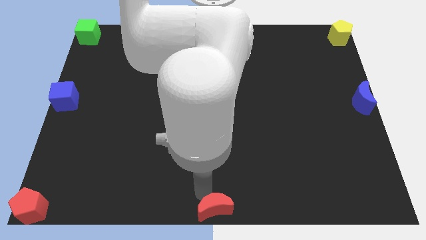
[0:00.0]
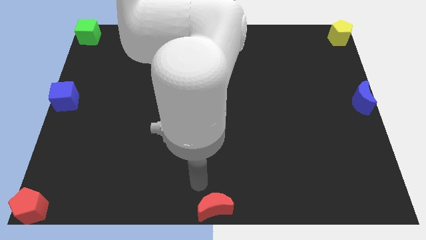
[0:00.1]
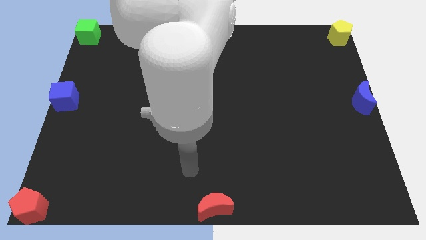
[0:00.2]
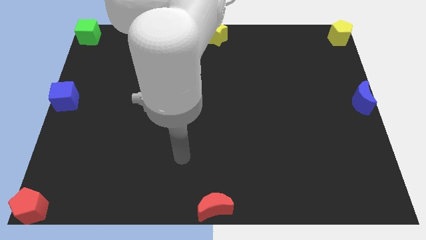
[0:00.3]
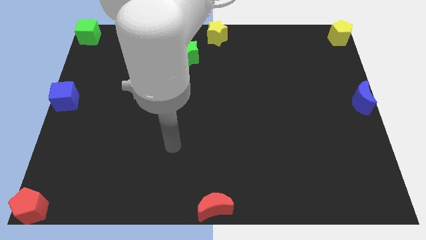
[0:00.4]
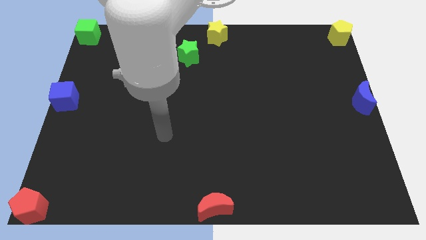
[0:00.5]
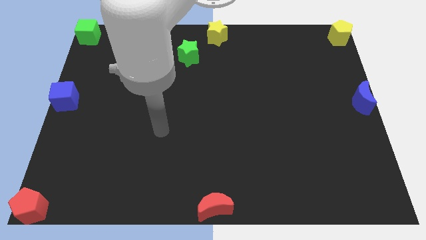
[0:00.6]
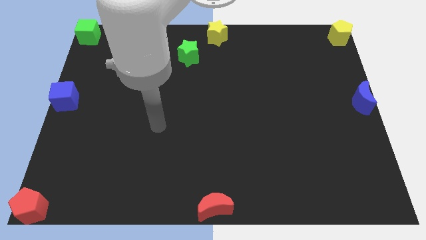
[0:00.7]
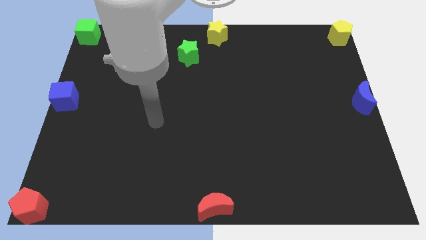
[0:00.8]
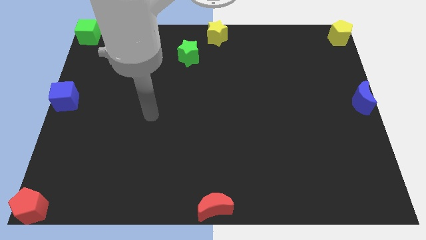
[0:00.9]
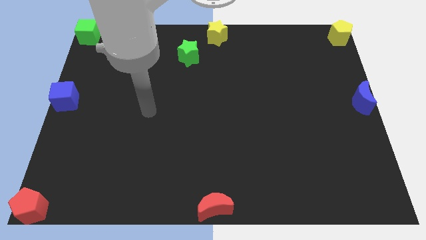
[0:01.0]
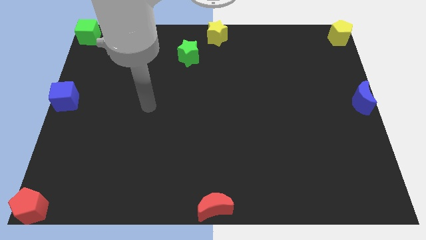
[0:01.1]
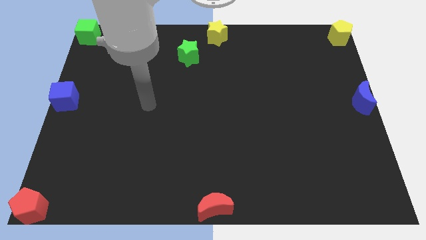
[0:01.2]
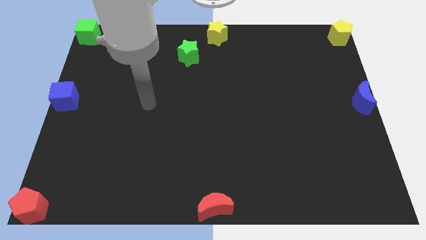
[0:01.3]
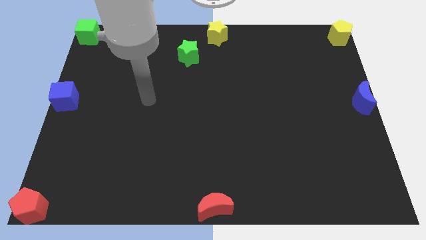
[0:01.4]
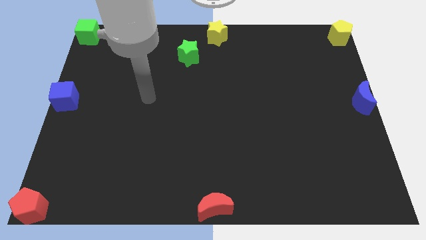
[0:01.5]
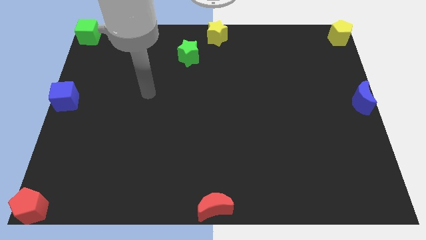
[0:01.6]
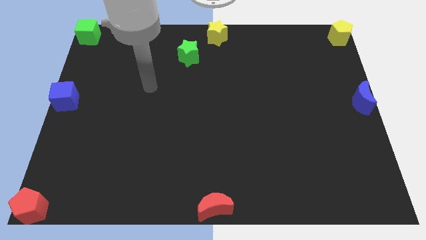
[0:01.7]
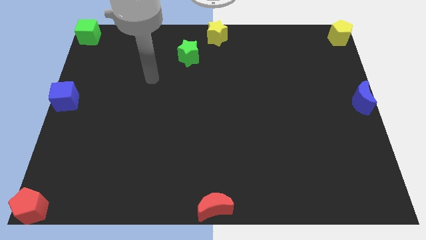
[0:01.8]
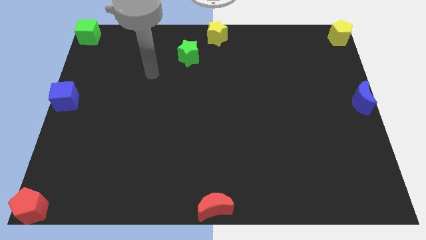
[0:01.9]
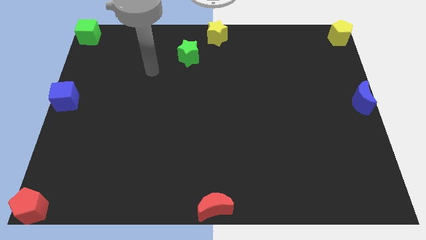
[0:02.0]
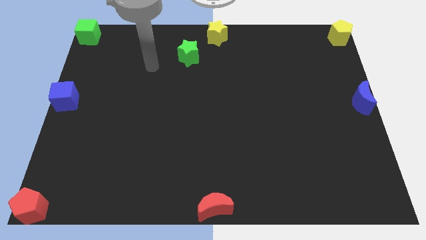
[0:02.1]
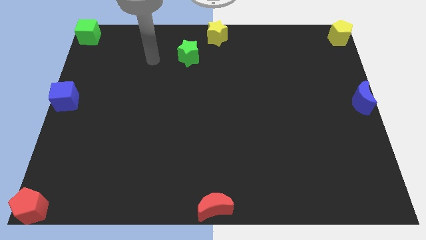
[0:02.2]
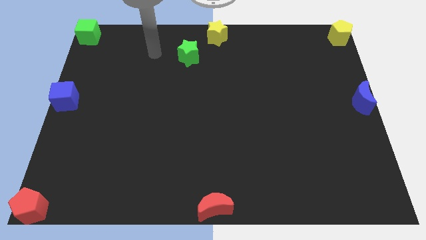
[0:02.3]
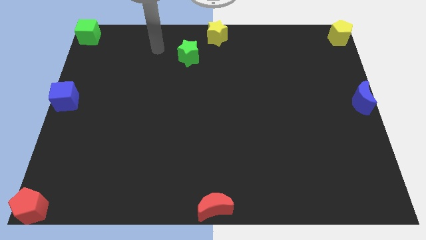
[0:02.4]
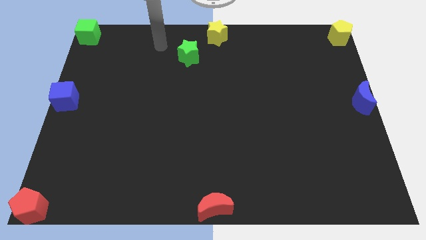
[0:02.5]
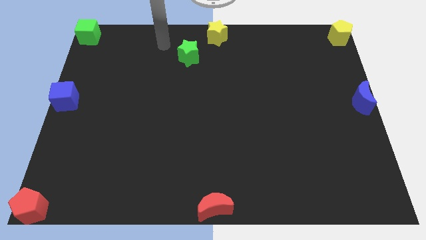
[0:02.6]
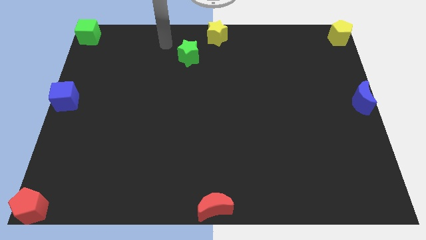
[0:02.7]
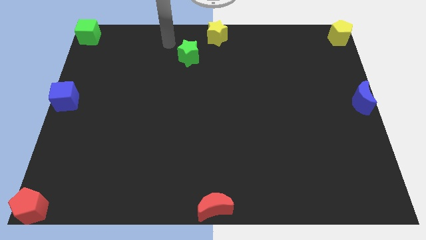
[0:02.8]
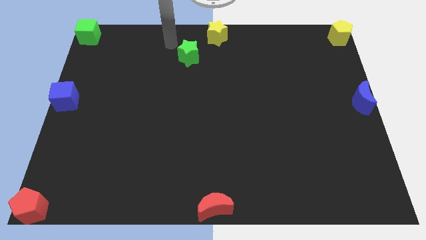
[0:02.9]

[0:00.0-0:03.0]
move the arm near the green star

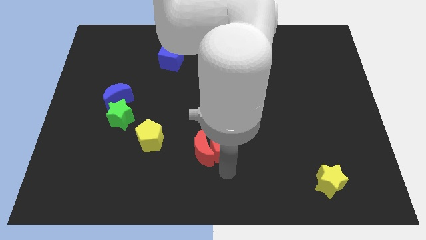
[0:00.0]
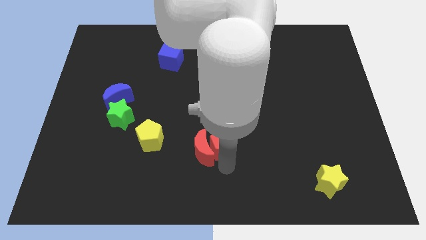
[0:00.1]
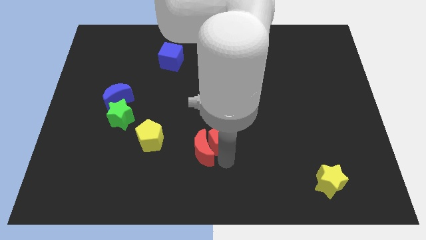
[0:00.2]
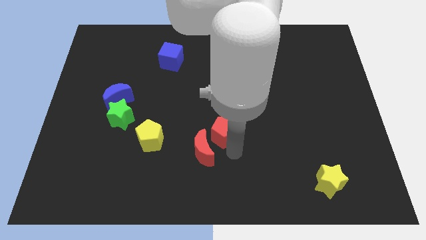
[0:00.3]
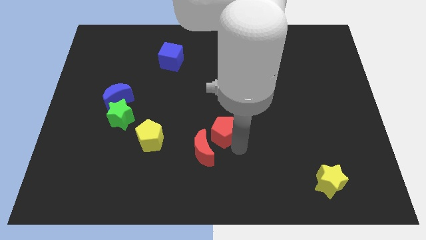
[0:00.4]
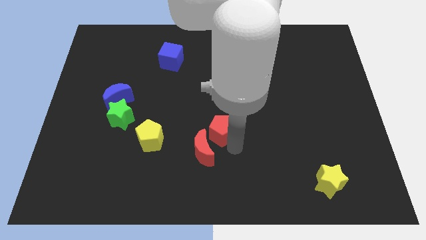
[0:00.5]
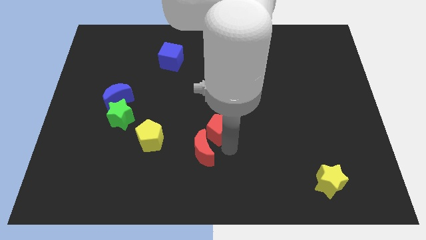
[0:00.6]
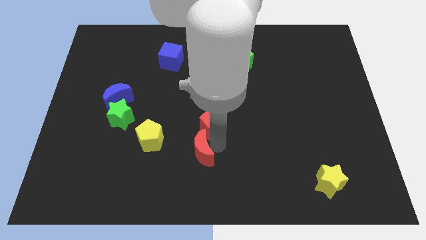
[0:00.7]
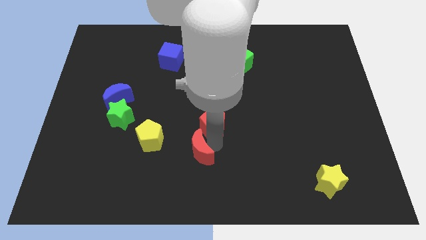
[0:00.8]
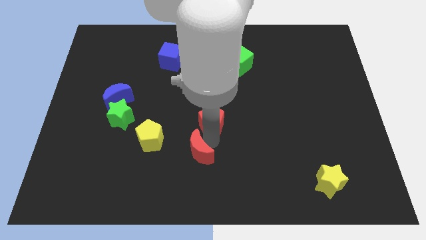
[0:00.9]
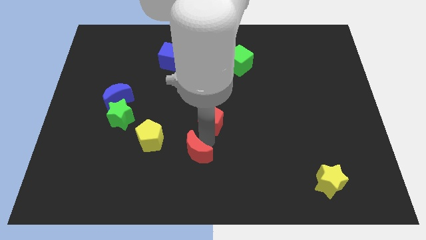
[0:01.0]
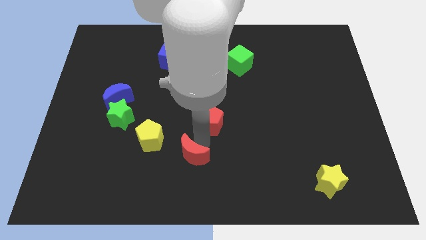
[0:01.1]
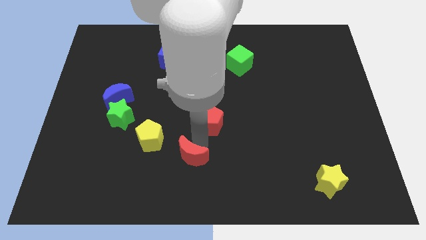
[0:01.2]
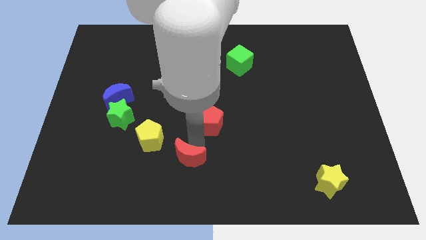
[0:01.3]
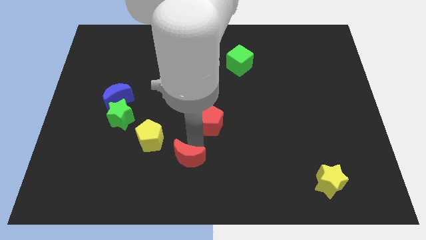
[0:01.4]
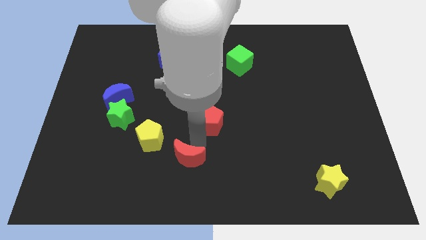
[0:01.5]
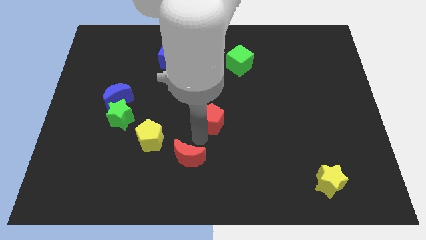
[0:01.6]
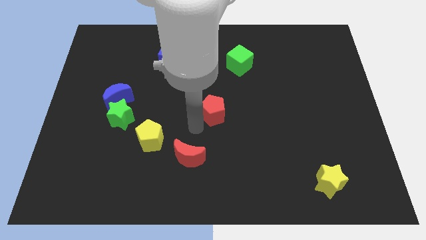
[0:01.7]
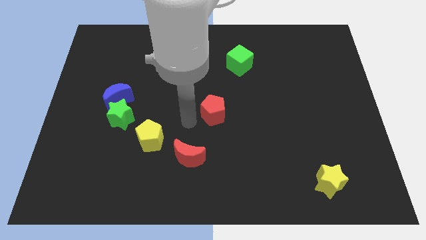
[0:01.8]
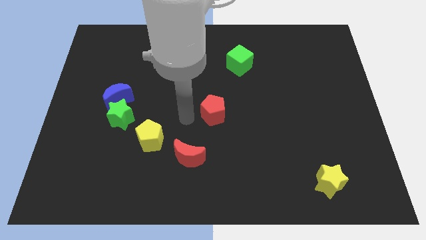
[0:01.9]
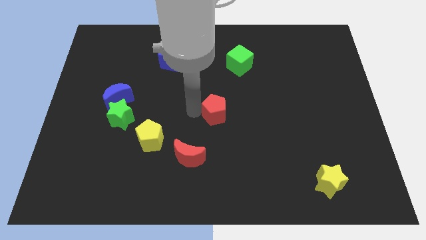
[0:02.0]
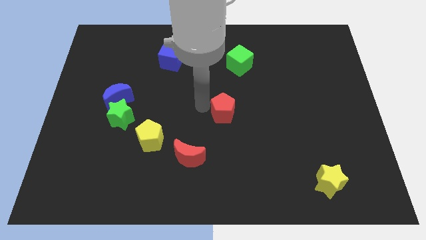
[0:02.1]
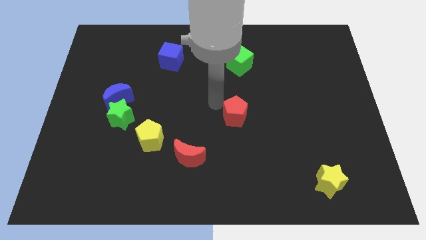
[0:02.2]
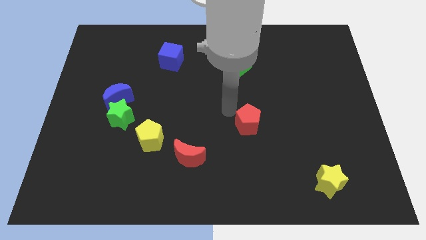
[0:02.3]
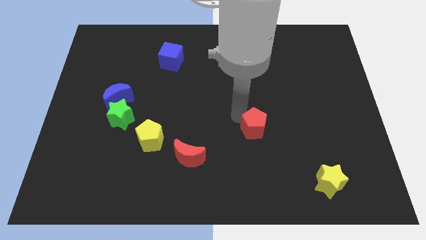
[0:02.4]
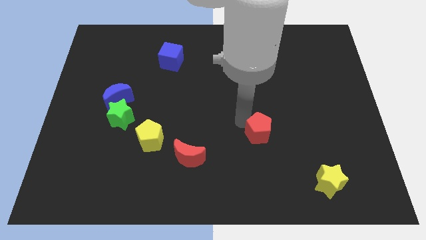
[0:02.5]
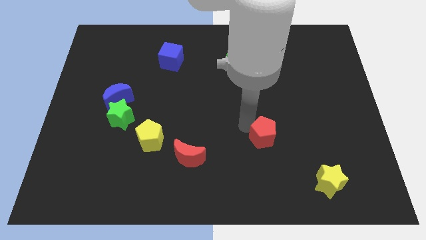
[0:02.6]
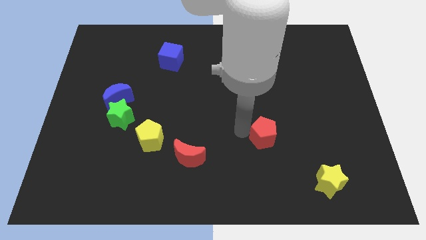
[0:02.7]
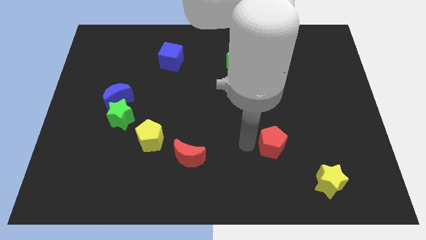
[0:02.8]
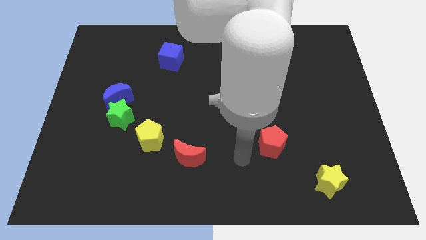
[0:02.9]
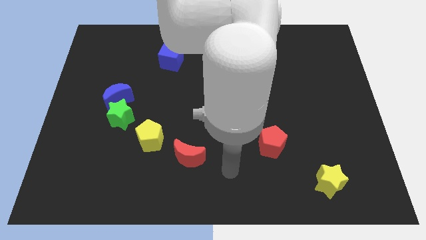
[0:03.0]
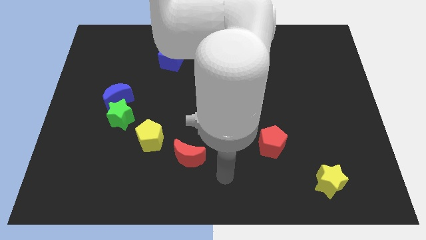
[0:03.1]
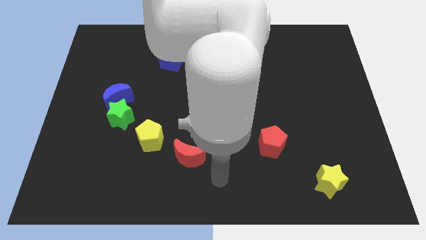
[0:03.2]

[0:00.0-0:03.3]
move red pentagon diagonally on the top left to yellow star

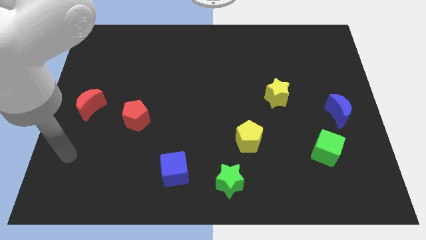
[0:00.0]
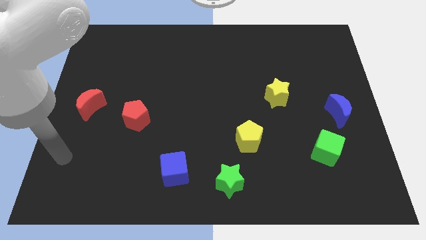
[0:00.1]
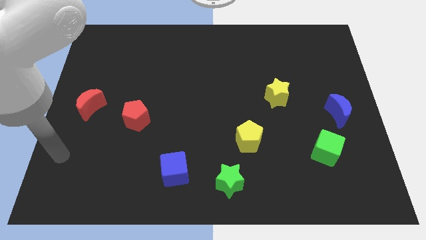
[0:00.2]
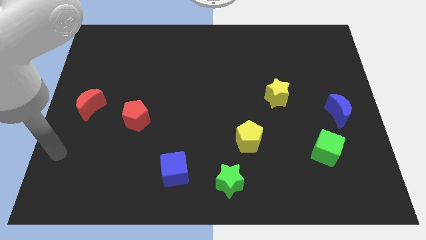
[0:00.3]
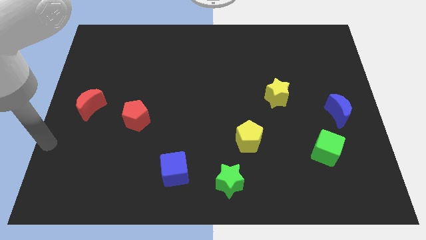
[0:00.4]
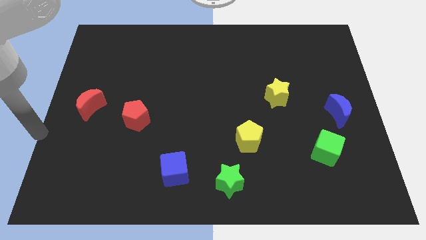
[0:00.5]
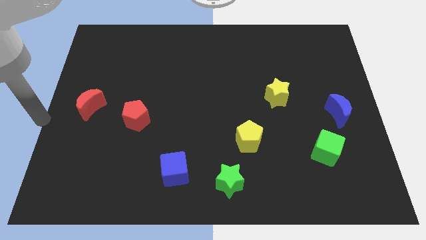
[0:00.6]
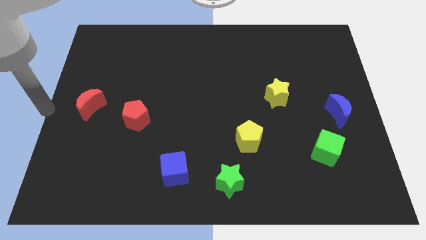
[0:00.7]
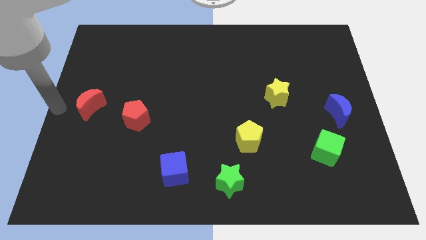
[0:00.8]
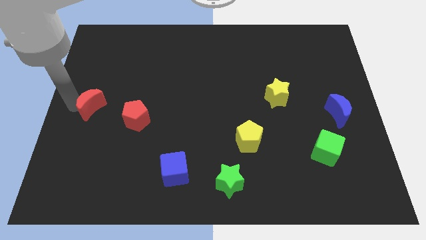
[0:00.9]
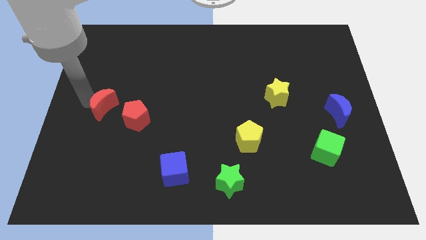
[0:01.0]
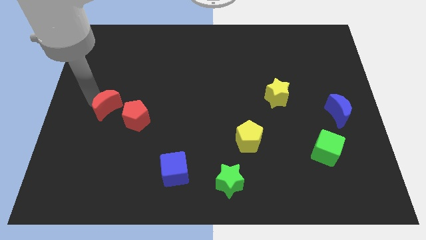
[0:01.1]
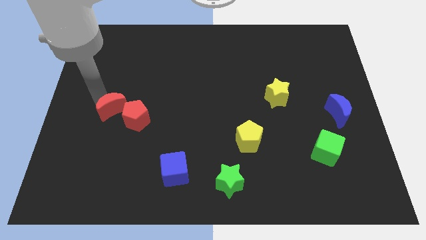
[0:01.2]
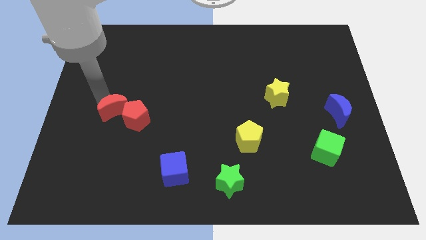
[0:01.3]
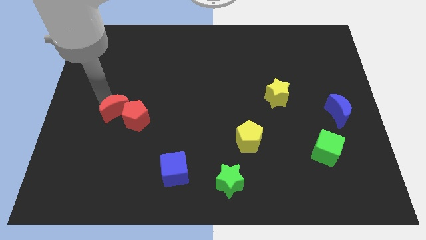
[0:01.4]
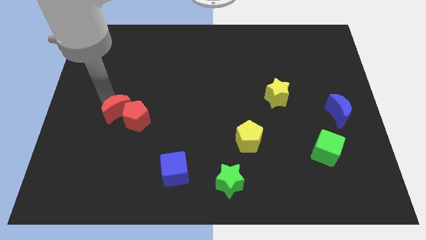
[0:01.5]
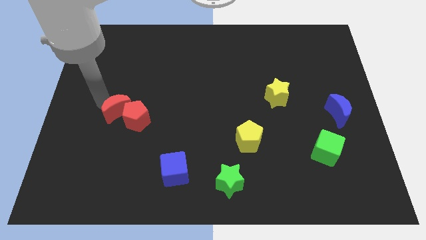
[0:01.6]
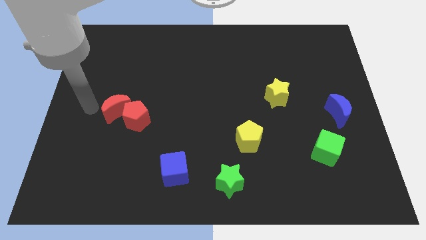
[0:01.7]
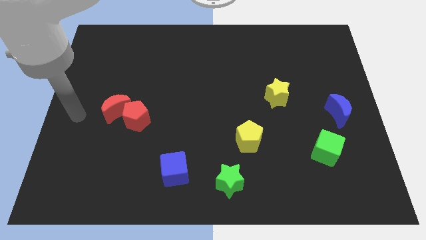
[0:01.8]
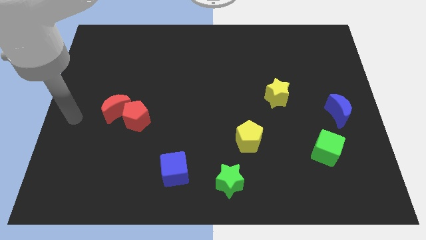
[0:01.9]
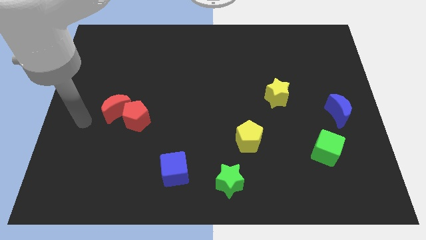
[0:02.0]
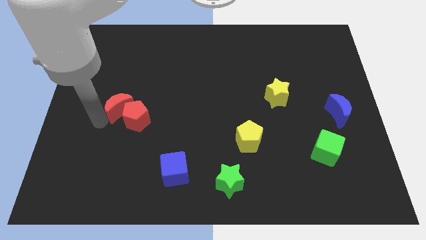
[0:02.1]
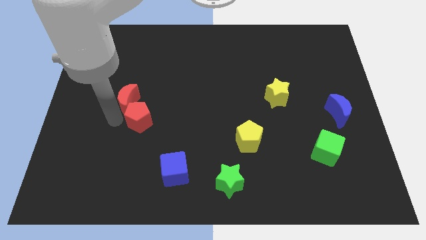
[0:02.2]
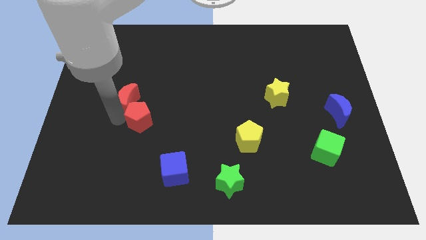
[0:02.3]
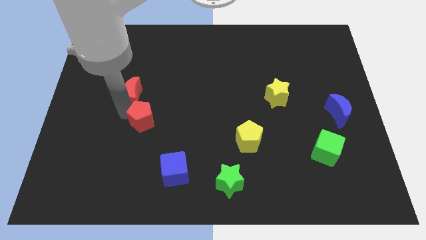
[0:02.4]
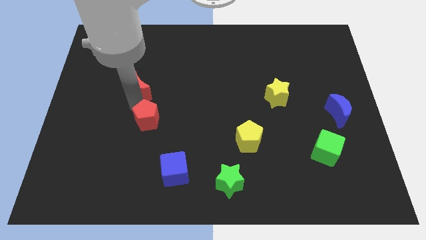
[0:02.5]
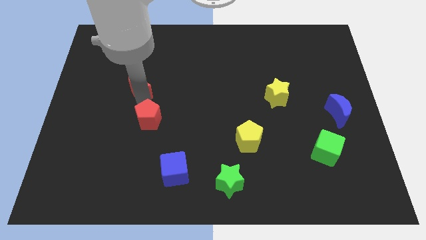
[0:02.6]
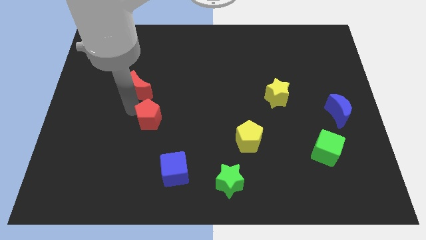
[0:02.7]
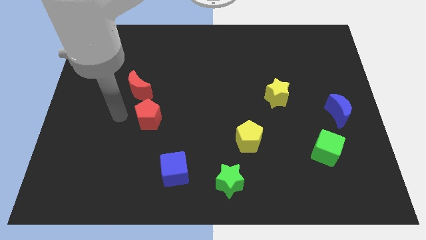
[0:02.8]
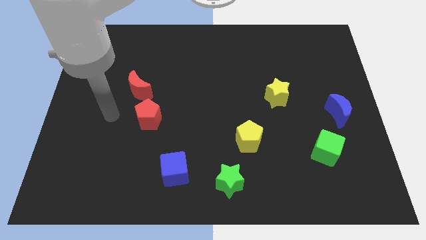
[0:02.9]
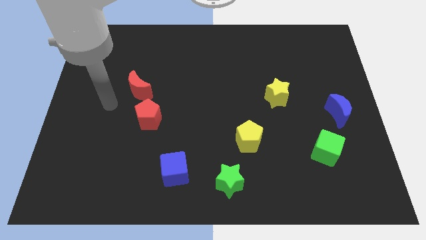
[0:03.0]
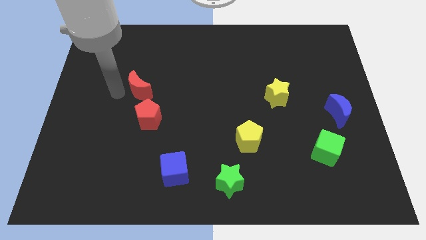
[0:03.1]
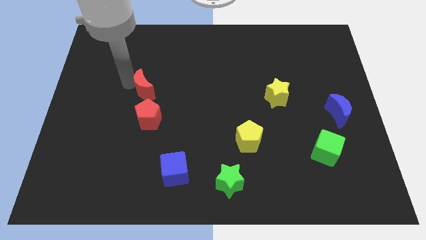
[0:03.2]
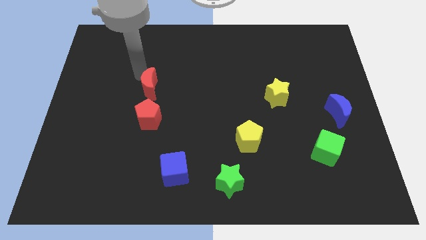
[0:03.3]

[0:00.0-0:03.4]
place the red moon above the red pentagon
